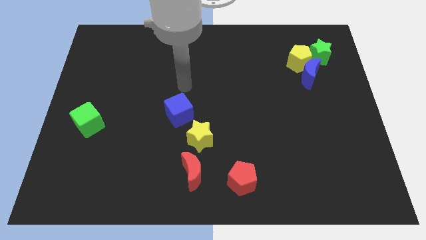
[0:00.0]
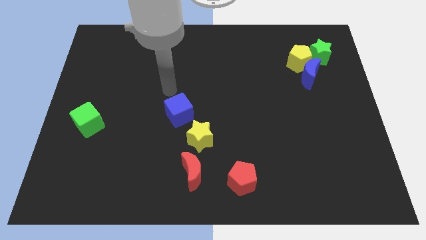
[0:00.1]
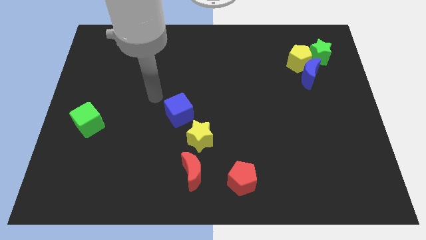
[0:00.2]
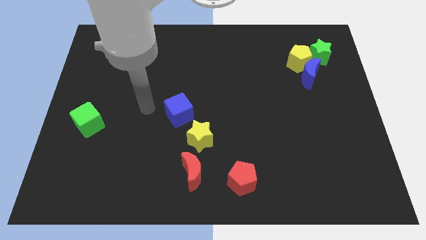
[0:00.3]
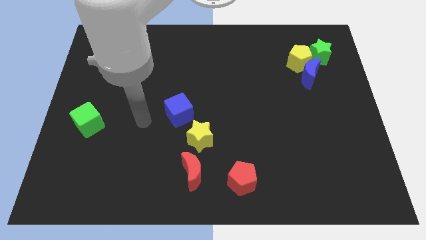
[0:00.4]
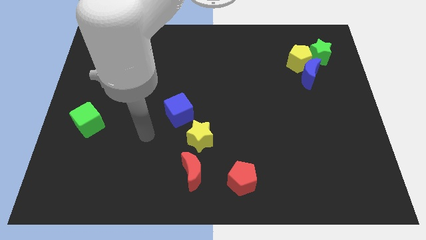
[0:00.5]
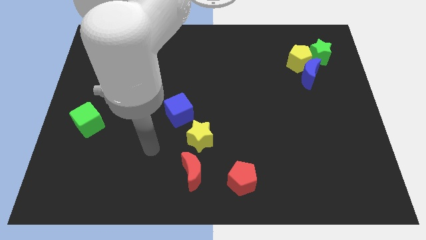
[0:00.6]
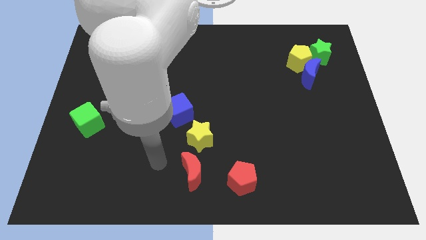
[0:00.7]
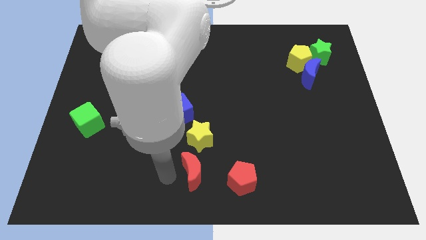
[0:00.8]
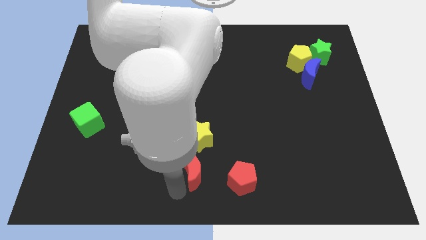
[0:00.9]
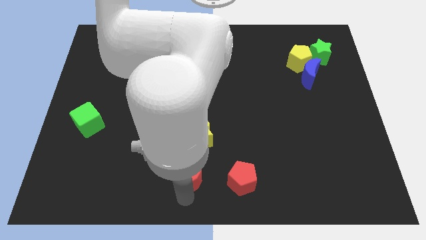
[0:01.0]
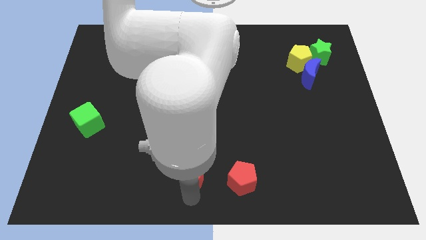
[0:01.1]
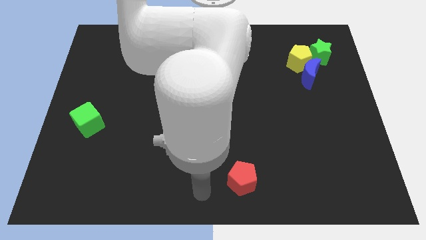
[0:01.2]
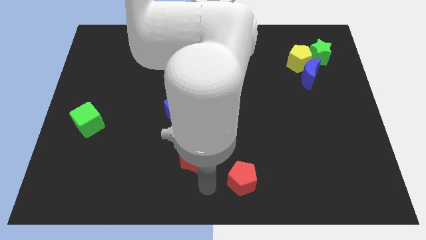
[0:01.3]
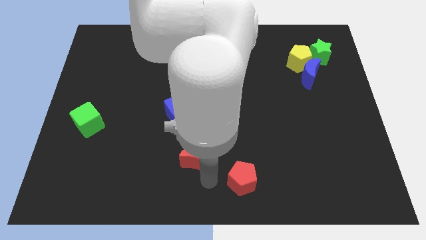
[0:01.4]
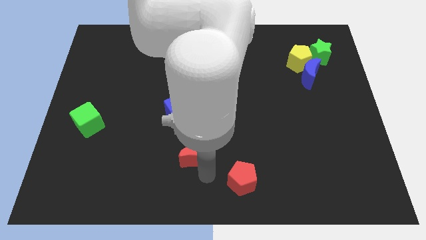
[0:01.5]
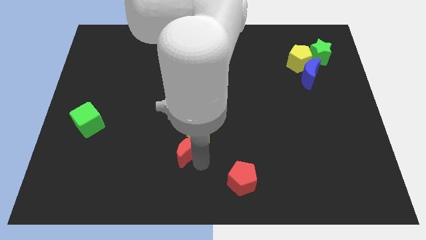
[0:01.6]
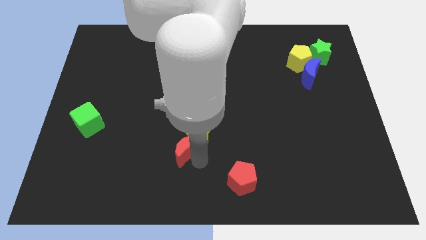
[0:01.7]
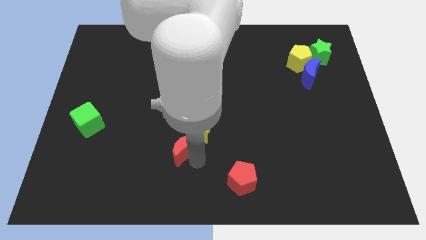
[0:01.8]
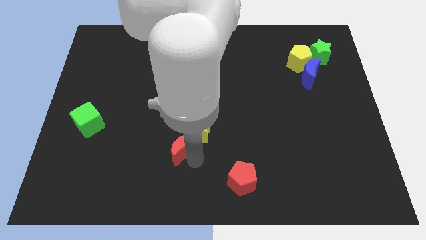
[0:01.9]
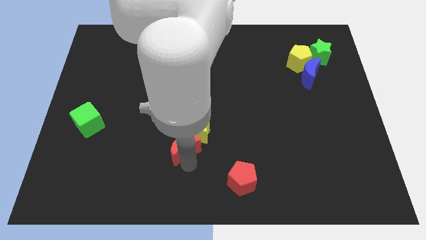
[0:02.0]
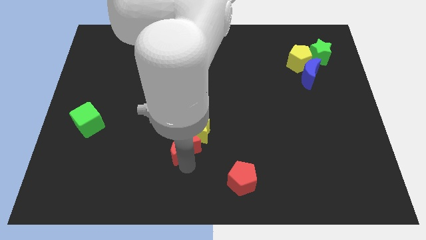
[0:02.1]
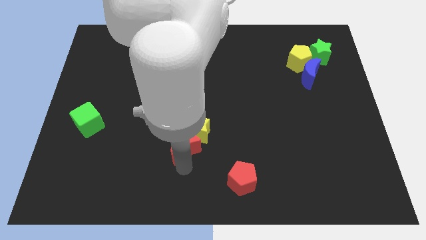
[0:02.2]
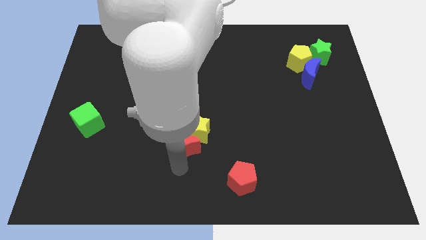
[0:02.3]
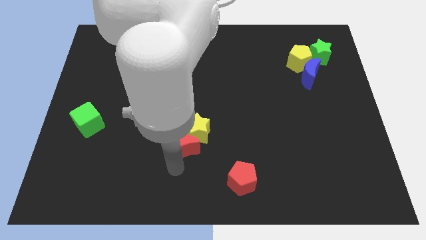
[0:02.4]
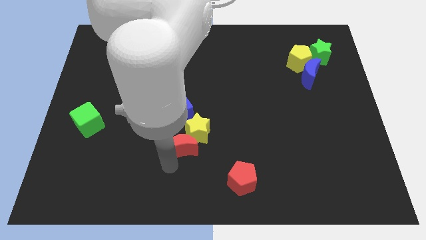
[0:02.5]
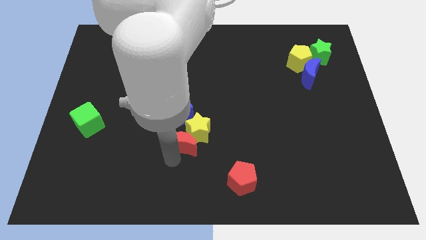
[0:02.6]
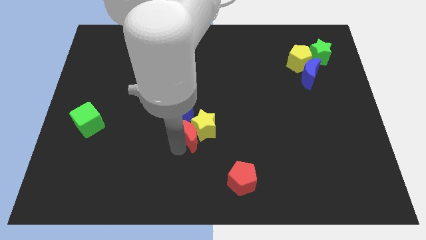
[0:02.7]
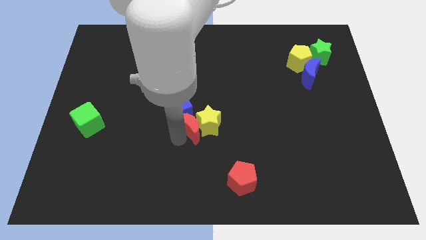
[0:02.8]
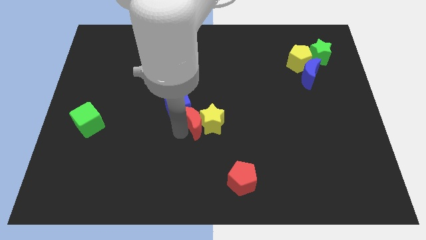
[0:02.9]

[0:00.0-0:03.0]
push the red crescent into the left side of the yellow star

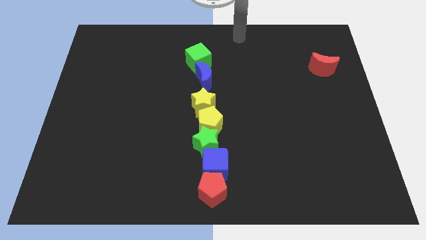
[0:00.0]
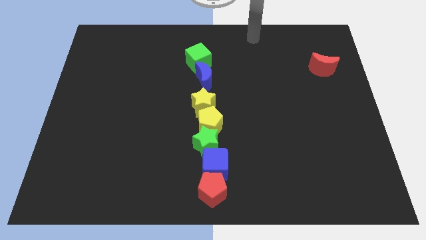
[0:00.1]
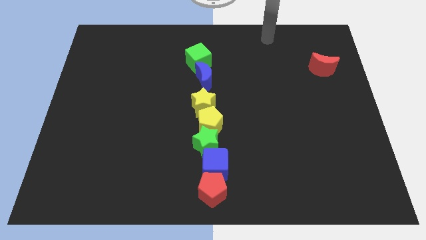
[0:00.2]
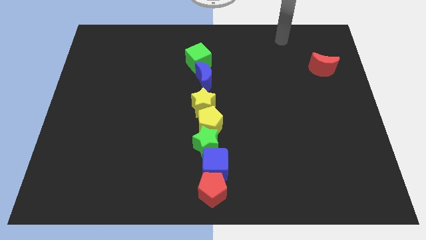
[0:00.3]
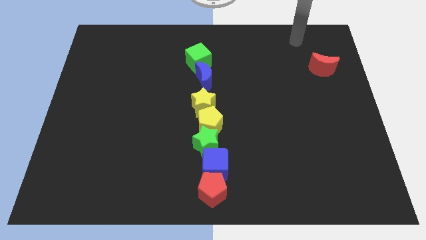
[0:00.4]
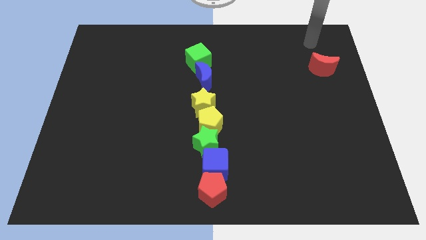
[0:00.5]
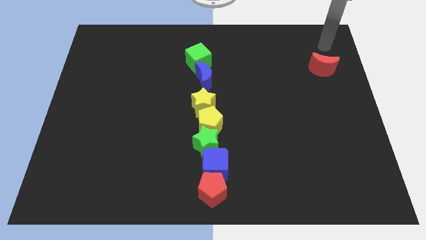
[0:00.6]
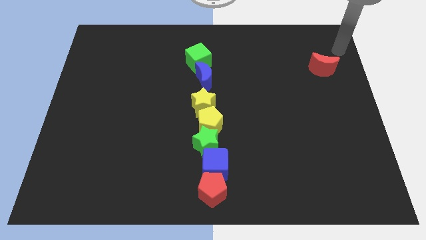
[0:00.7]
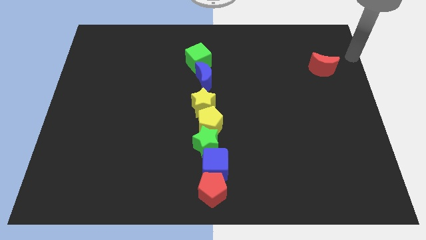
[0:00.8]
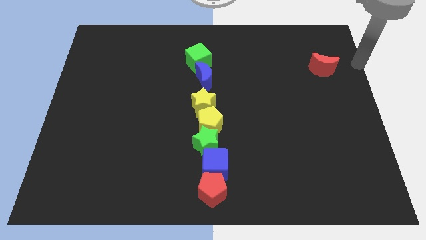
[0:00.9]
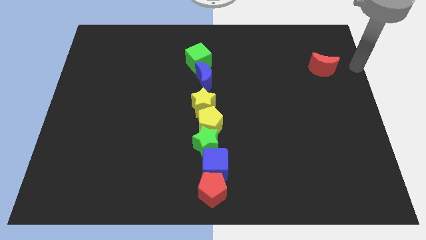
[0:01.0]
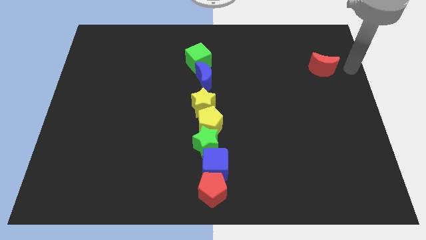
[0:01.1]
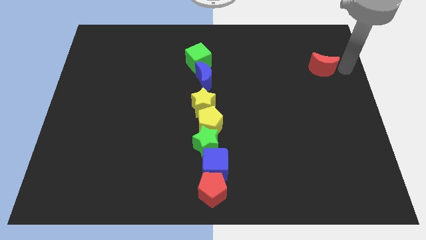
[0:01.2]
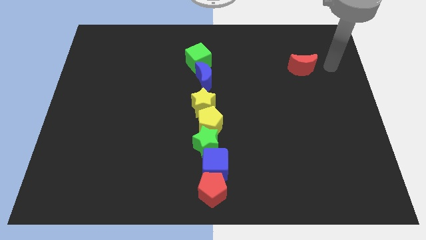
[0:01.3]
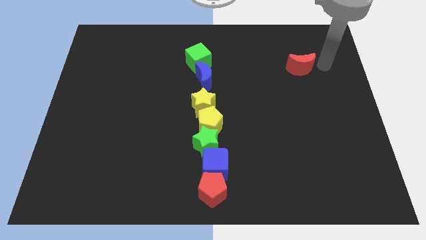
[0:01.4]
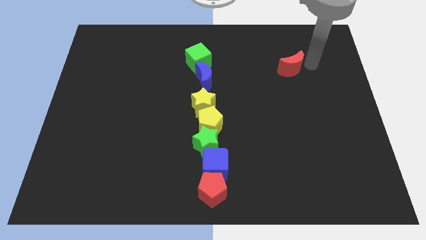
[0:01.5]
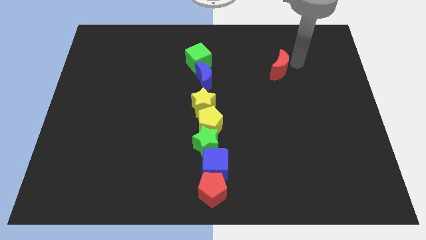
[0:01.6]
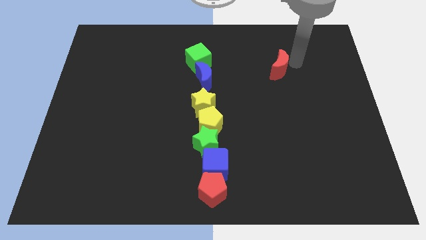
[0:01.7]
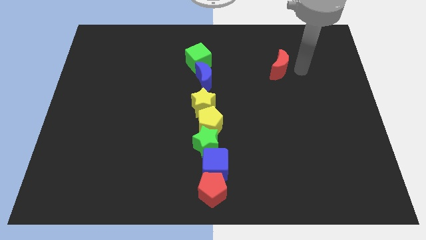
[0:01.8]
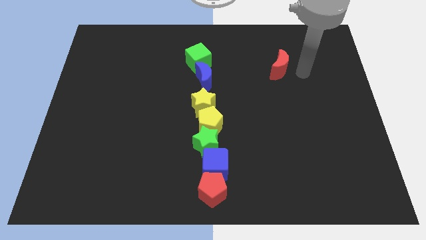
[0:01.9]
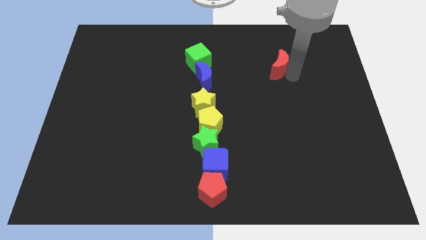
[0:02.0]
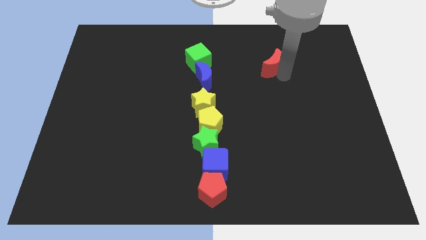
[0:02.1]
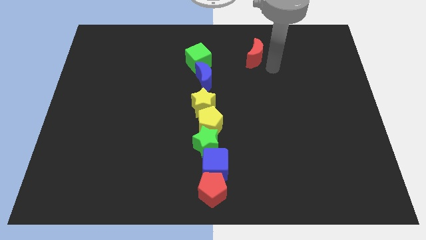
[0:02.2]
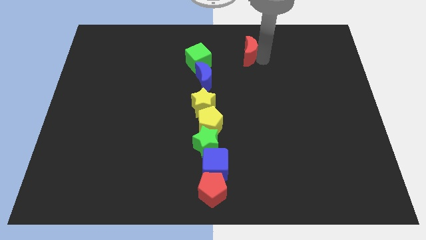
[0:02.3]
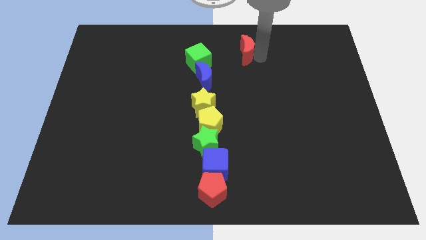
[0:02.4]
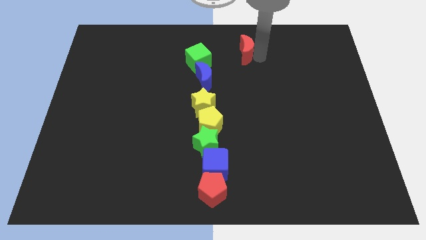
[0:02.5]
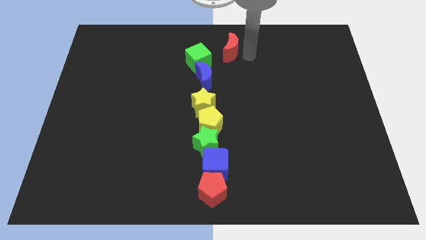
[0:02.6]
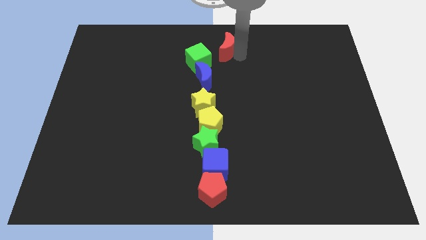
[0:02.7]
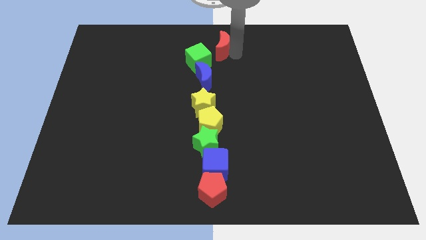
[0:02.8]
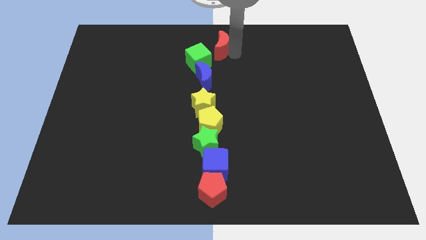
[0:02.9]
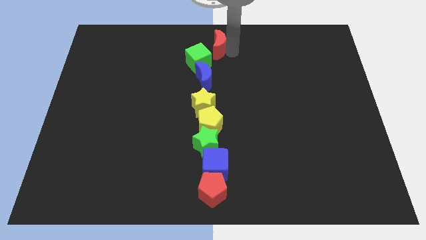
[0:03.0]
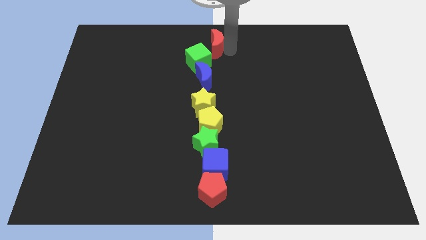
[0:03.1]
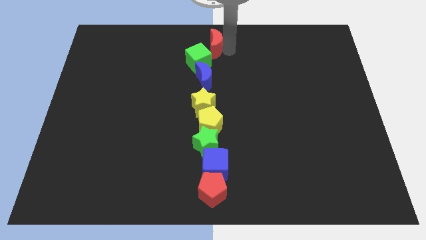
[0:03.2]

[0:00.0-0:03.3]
move the red crescent to the top center of the board

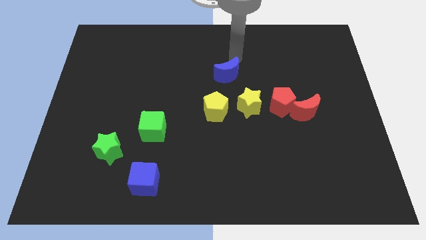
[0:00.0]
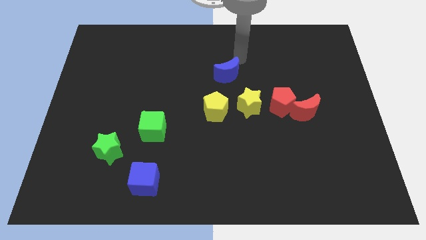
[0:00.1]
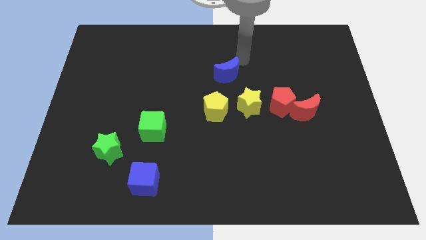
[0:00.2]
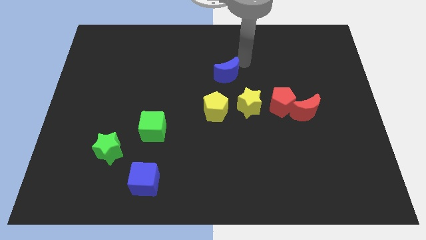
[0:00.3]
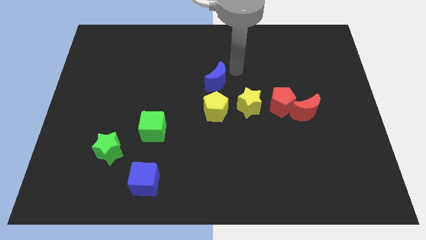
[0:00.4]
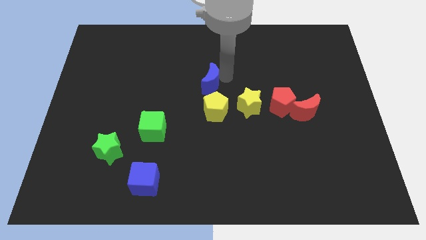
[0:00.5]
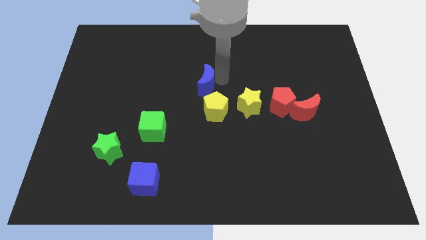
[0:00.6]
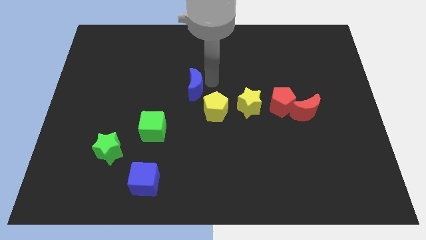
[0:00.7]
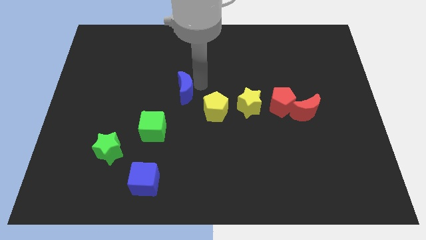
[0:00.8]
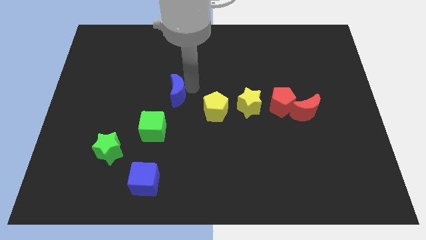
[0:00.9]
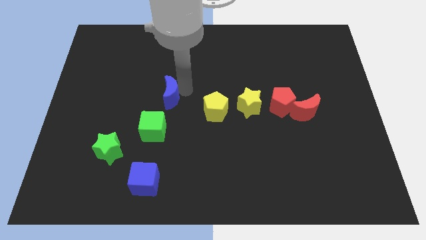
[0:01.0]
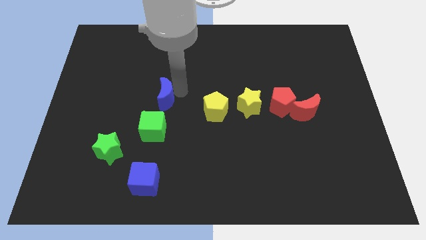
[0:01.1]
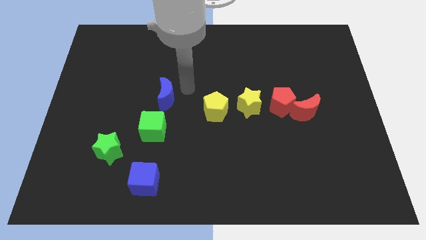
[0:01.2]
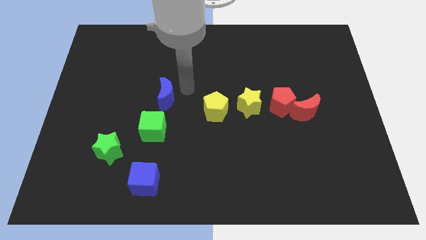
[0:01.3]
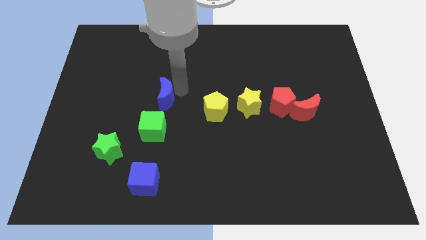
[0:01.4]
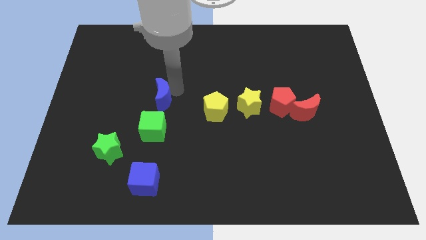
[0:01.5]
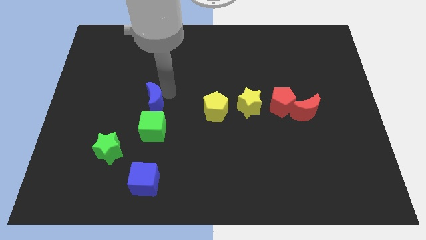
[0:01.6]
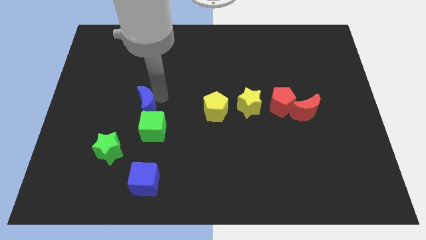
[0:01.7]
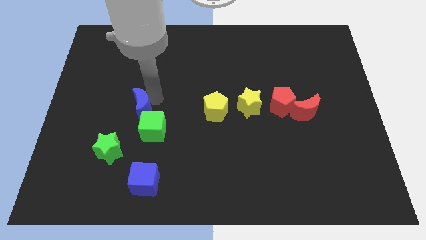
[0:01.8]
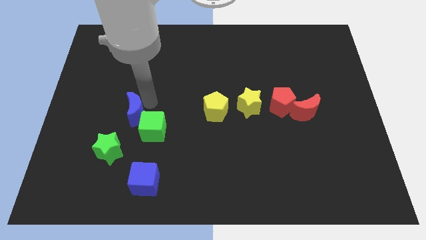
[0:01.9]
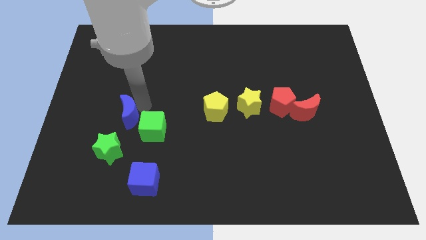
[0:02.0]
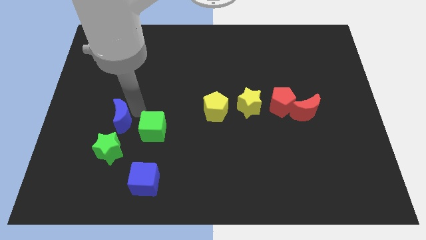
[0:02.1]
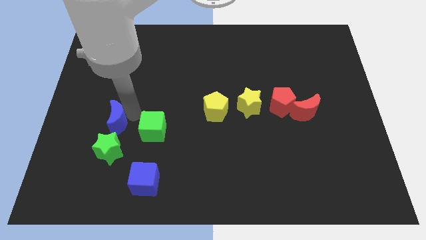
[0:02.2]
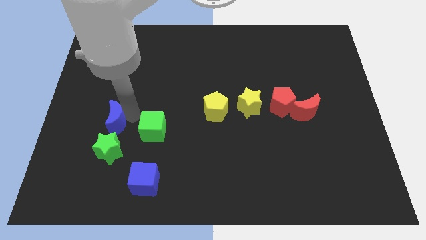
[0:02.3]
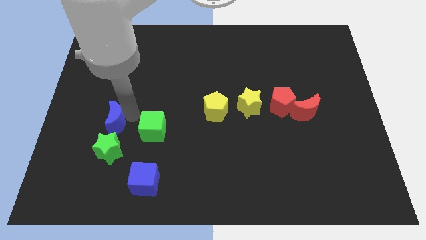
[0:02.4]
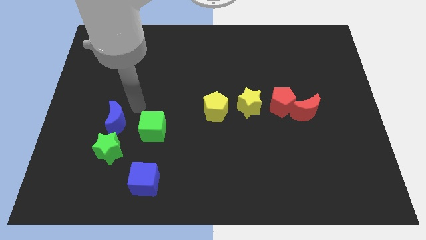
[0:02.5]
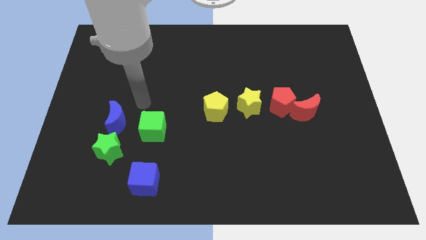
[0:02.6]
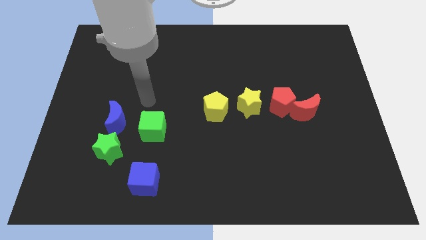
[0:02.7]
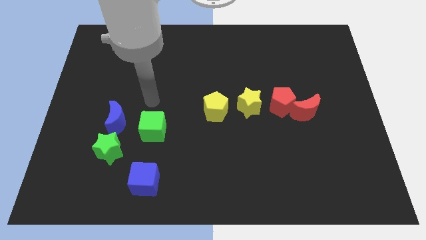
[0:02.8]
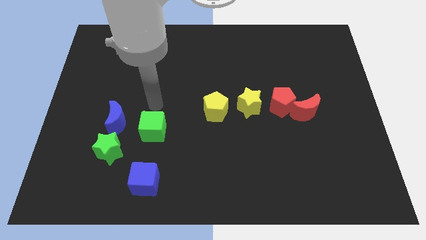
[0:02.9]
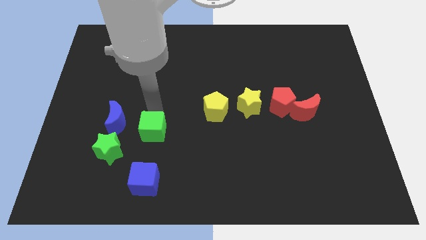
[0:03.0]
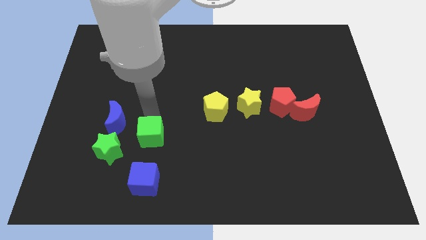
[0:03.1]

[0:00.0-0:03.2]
place blue crescent on top of the green star
